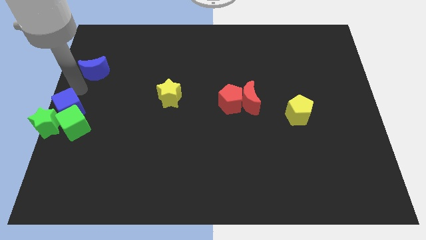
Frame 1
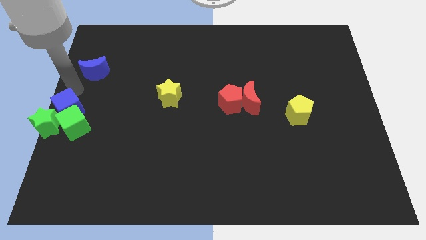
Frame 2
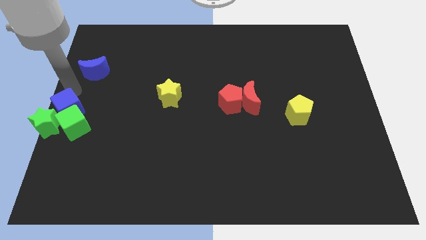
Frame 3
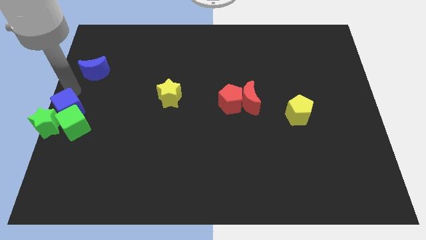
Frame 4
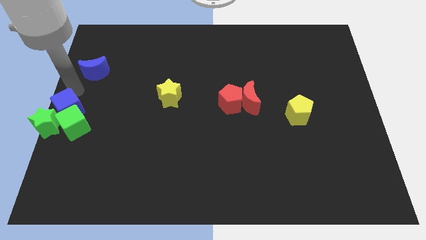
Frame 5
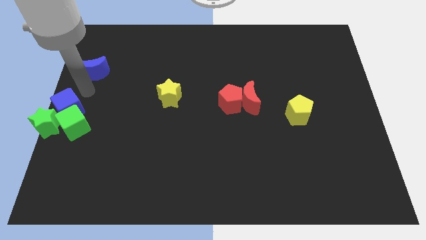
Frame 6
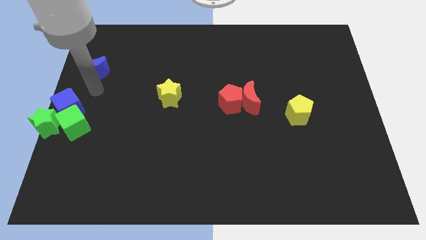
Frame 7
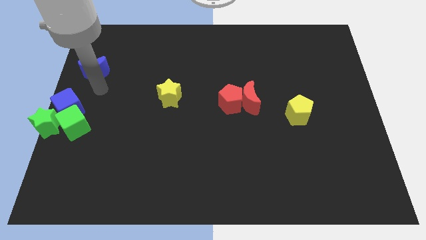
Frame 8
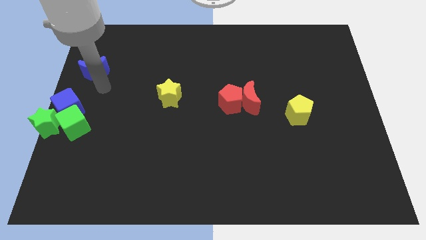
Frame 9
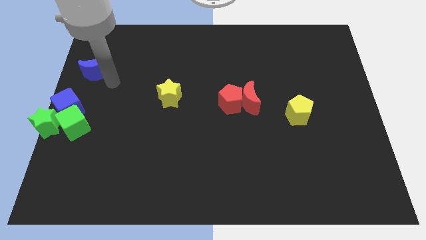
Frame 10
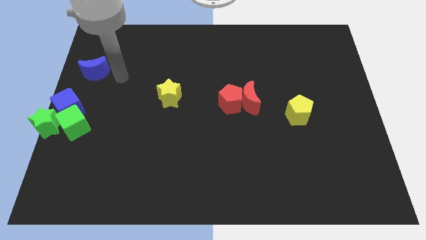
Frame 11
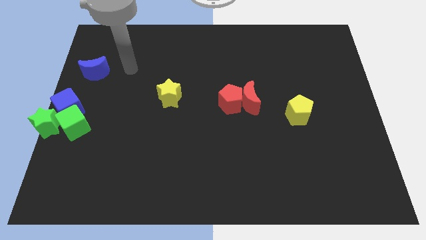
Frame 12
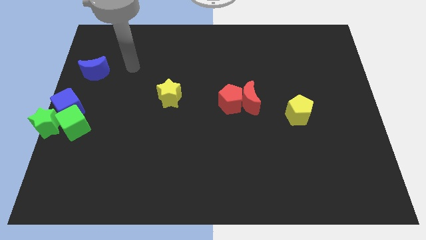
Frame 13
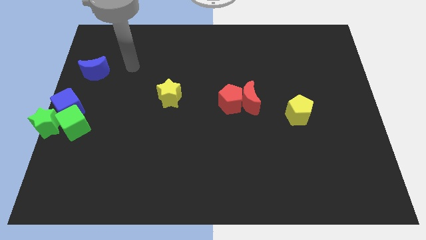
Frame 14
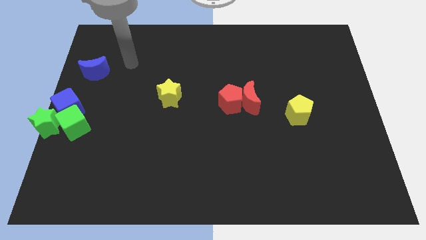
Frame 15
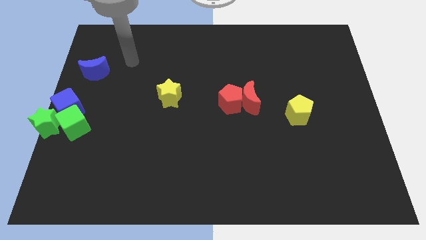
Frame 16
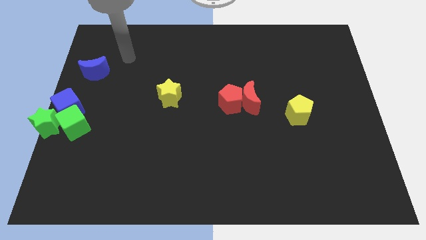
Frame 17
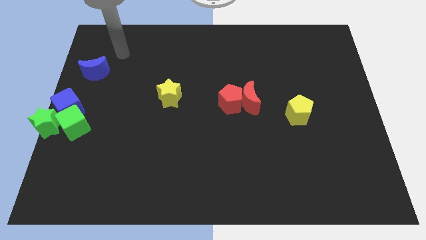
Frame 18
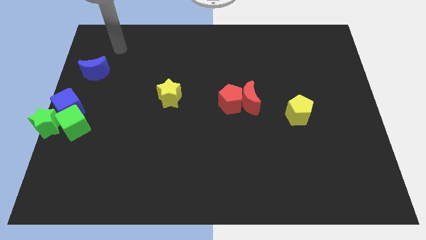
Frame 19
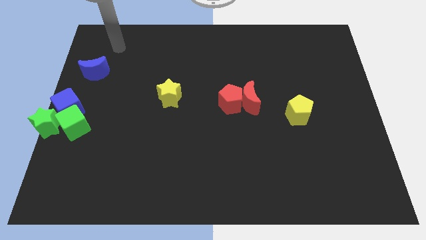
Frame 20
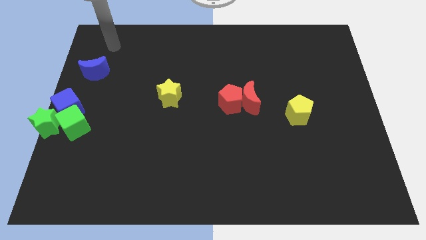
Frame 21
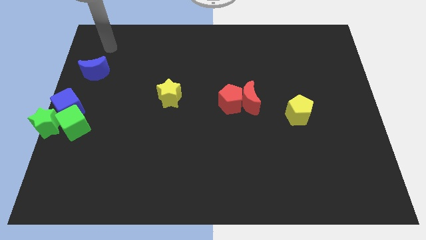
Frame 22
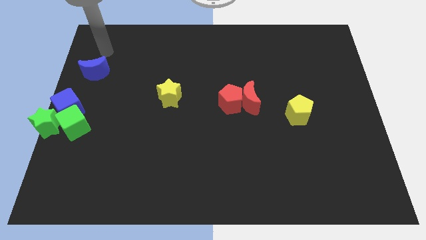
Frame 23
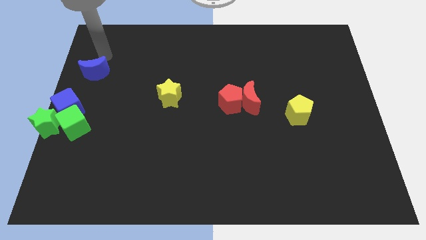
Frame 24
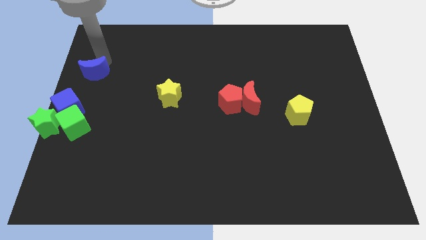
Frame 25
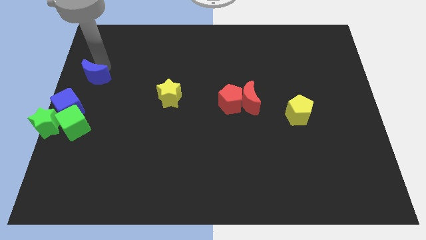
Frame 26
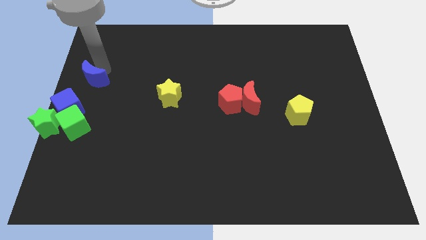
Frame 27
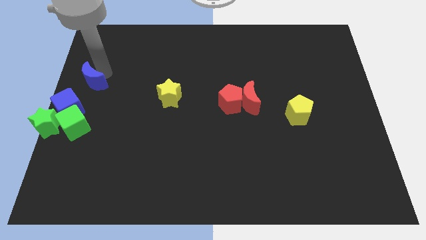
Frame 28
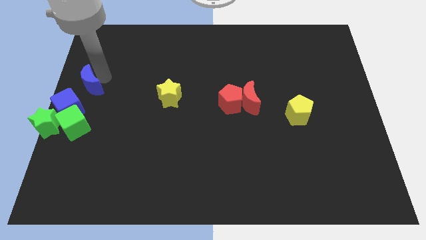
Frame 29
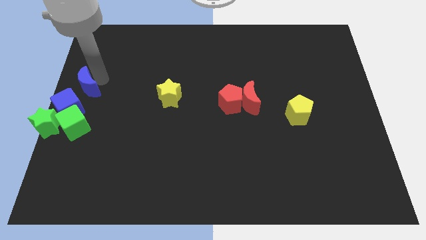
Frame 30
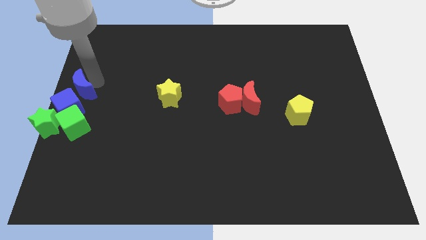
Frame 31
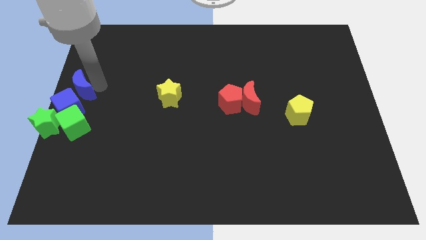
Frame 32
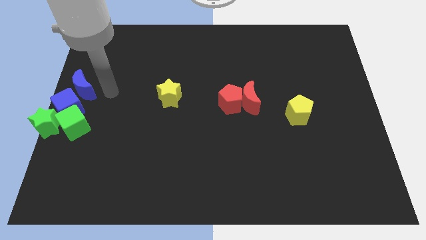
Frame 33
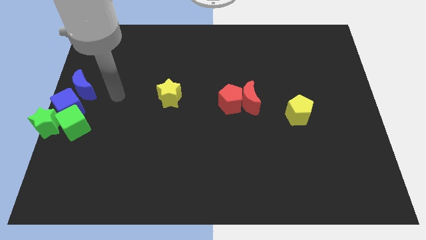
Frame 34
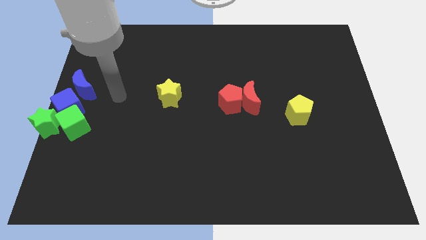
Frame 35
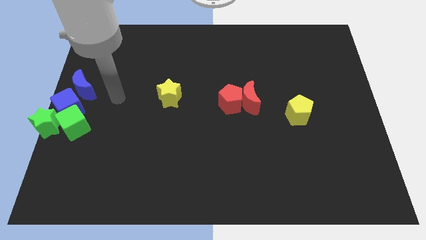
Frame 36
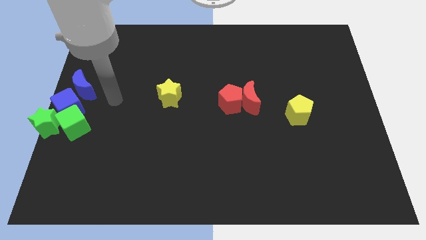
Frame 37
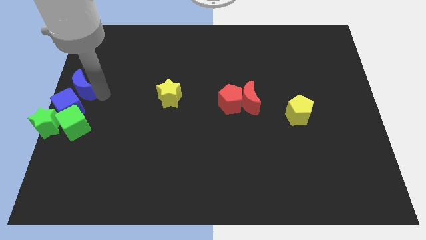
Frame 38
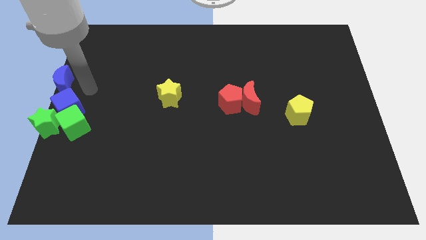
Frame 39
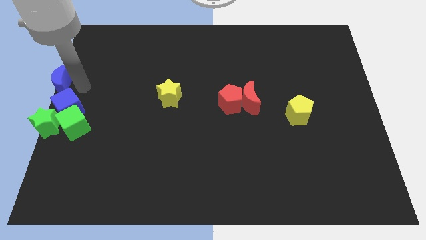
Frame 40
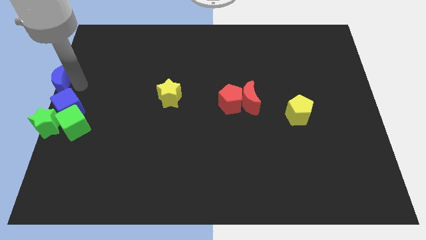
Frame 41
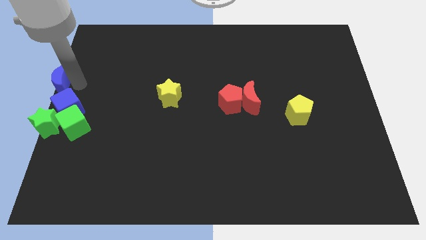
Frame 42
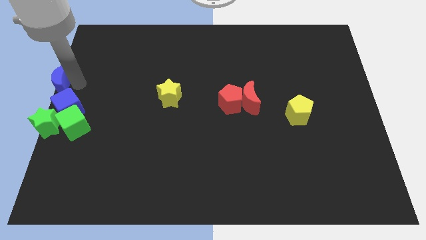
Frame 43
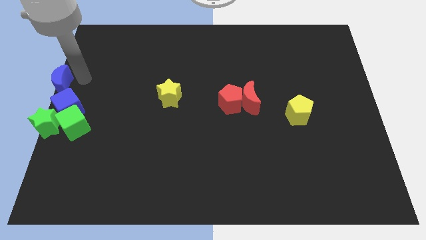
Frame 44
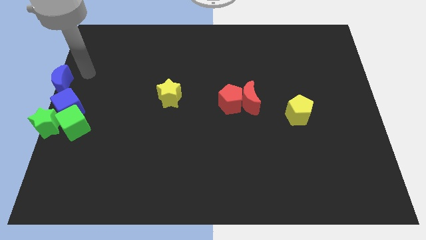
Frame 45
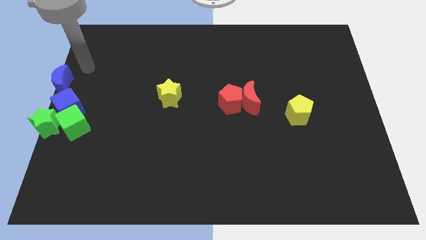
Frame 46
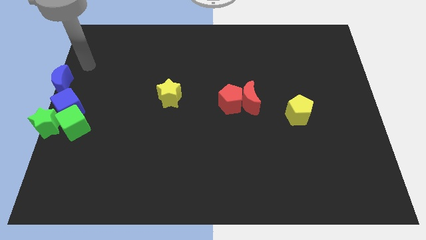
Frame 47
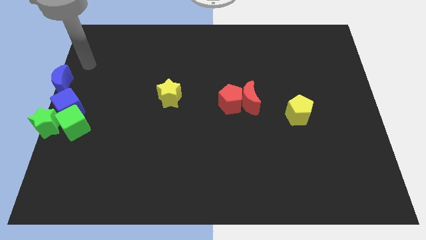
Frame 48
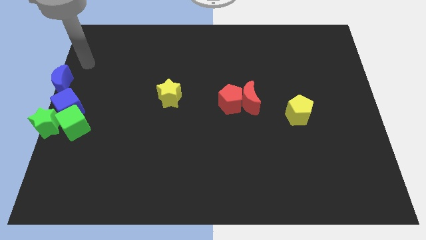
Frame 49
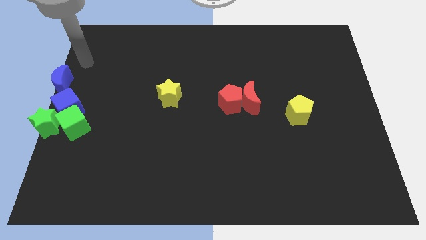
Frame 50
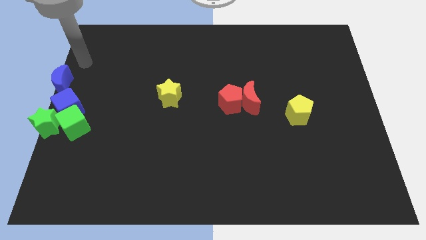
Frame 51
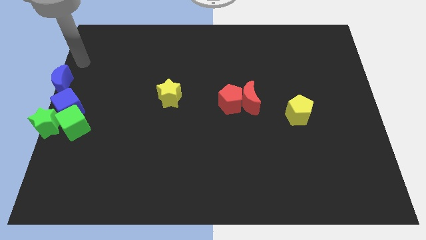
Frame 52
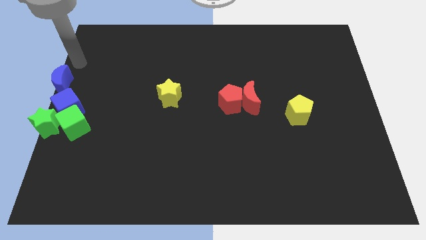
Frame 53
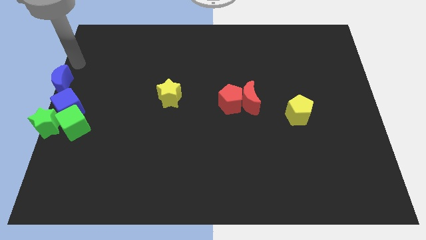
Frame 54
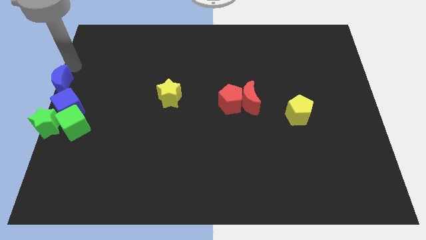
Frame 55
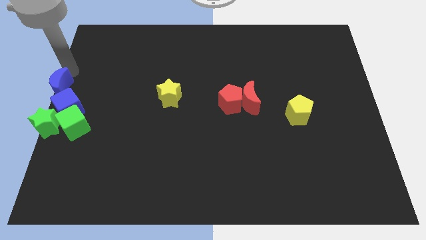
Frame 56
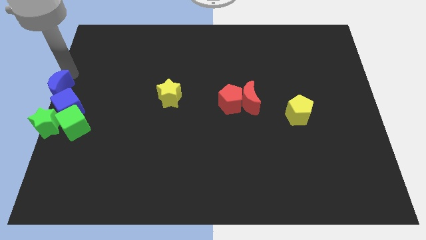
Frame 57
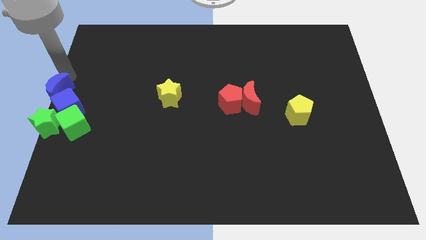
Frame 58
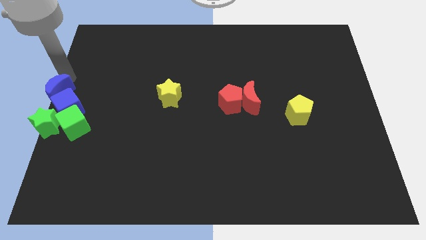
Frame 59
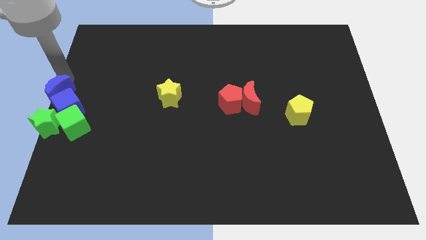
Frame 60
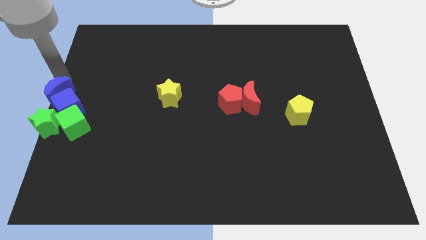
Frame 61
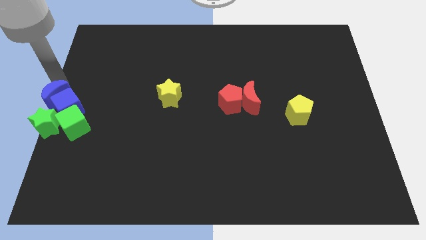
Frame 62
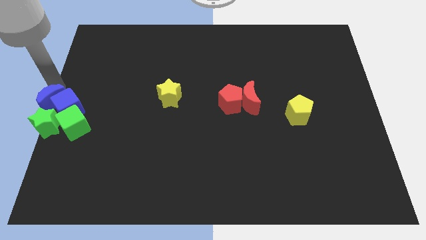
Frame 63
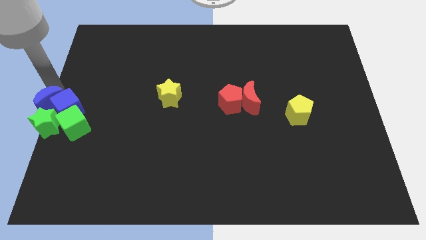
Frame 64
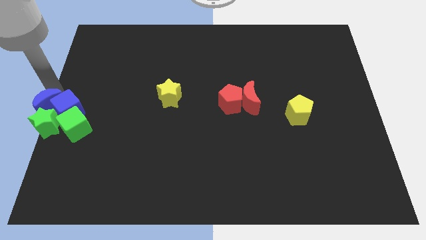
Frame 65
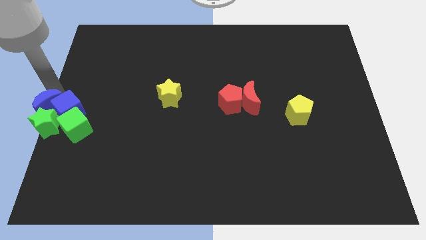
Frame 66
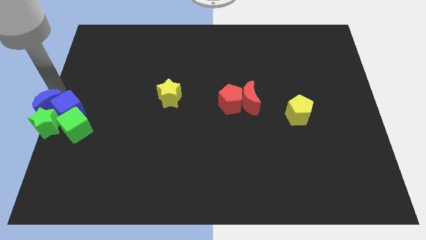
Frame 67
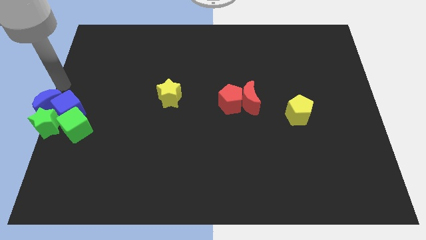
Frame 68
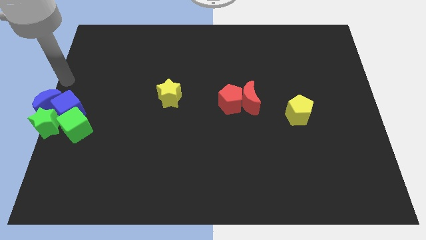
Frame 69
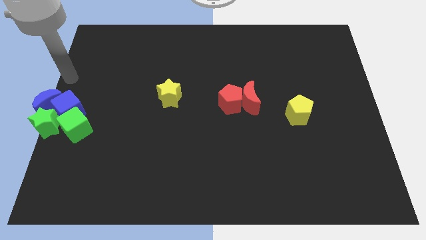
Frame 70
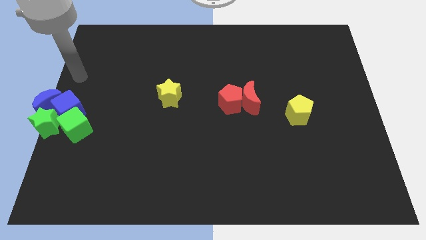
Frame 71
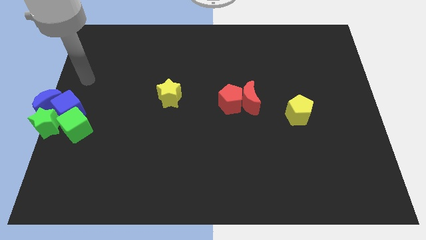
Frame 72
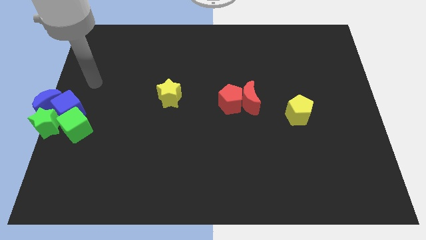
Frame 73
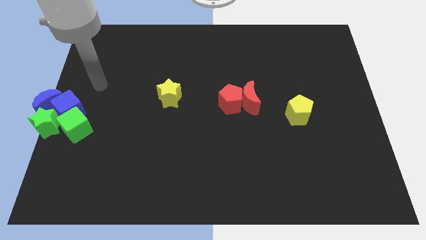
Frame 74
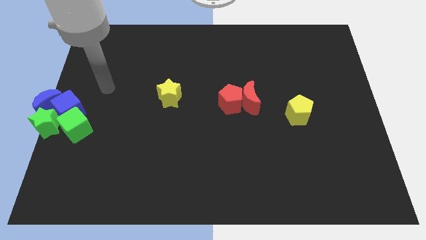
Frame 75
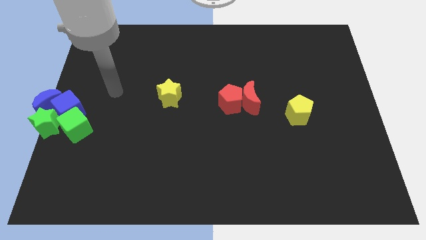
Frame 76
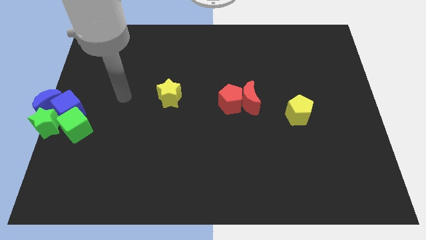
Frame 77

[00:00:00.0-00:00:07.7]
put the blue moon at the center left of the board

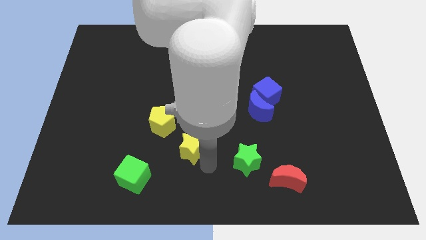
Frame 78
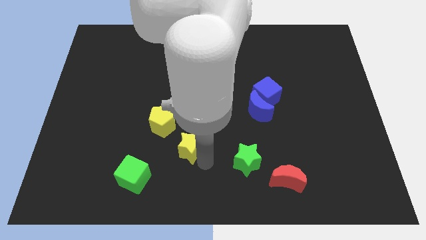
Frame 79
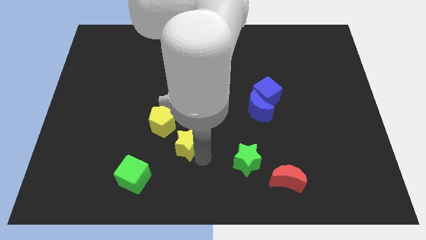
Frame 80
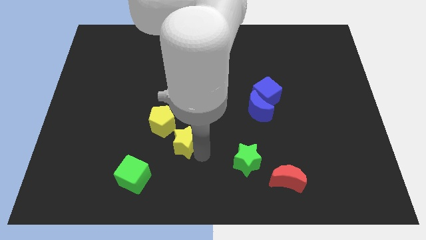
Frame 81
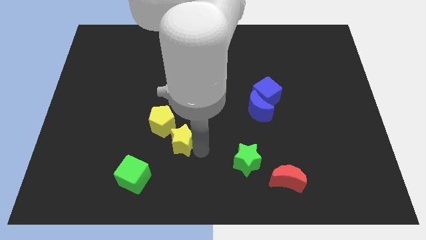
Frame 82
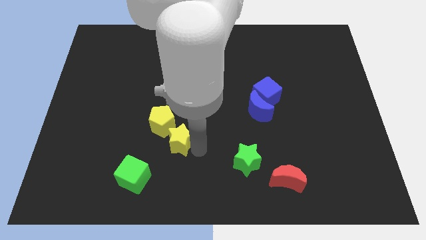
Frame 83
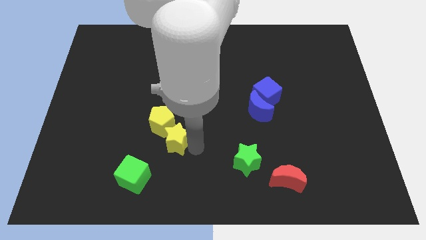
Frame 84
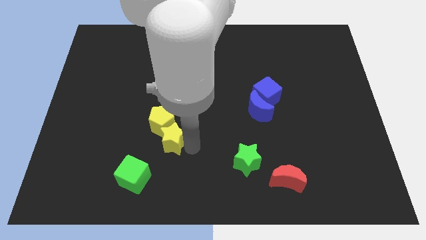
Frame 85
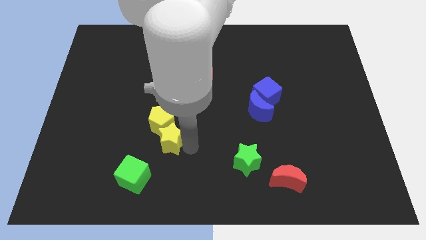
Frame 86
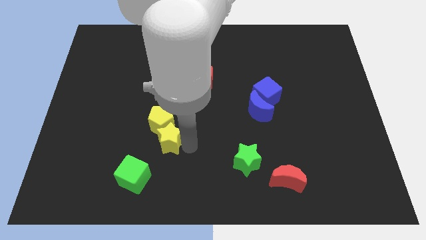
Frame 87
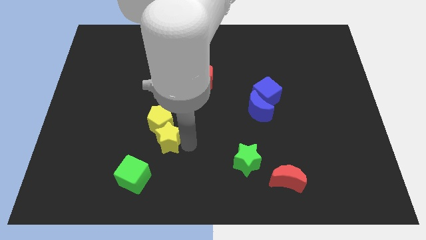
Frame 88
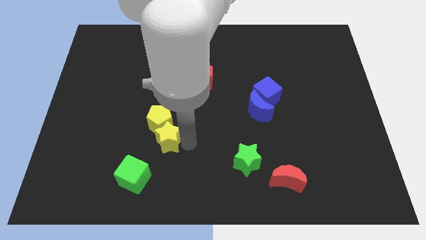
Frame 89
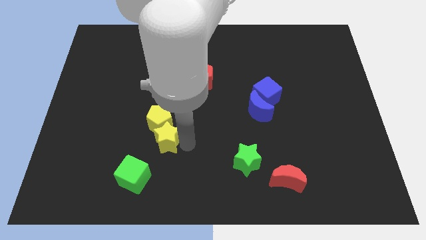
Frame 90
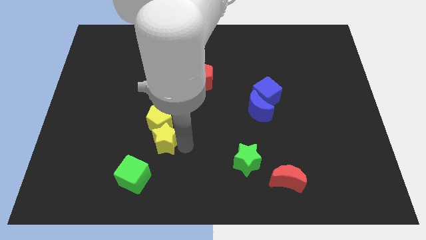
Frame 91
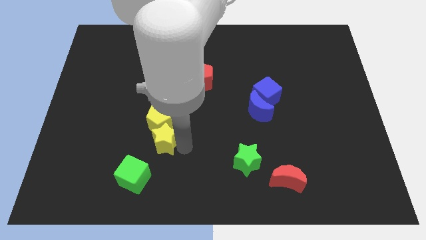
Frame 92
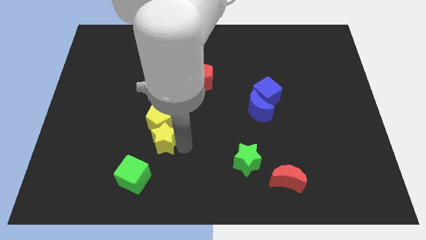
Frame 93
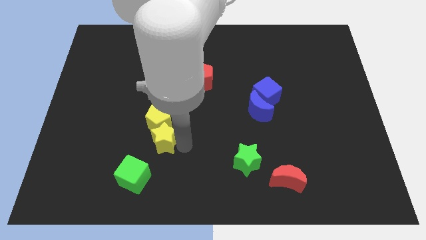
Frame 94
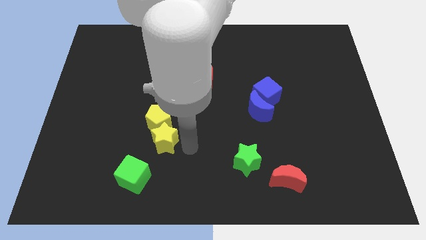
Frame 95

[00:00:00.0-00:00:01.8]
push the yellow star towards the yellow pentagon
